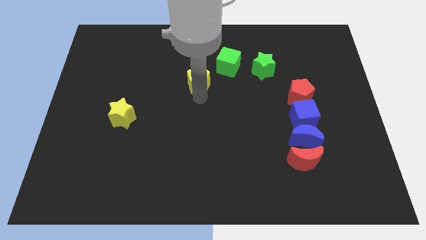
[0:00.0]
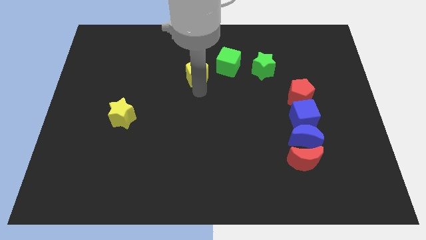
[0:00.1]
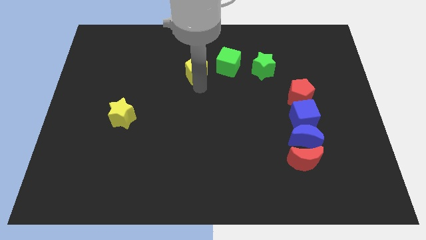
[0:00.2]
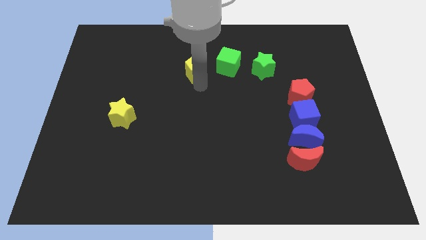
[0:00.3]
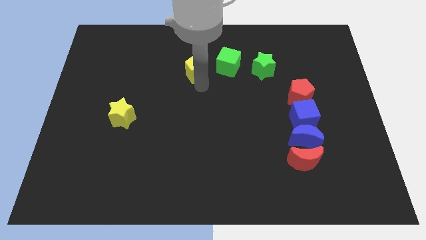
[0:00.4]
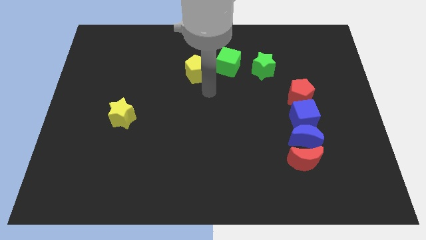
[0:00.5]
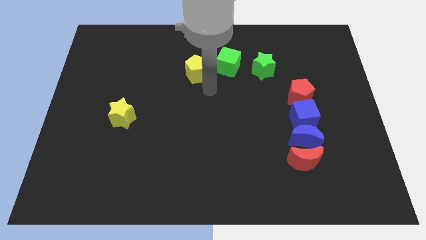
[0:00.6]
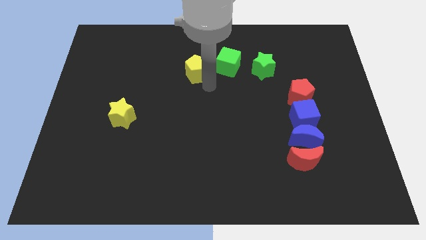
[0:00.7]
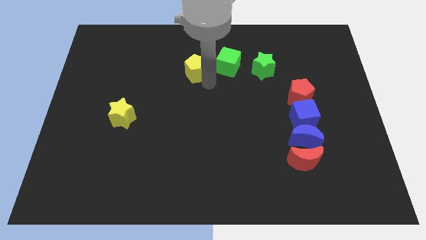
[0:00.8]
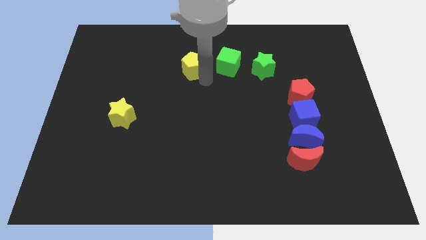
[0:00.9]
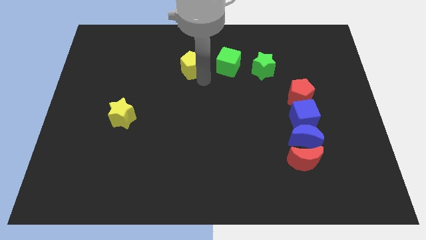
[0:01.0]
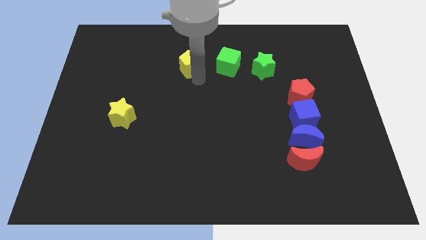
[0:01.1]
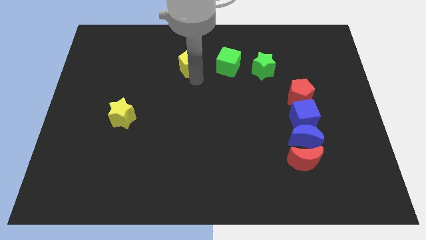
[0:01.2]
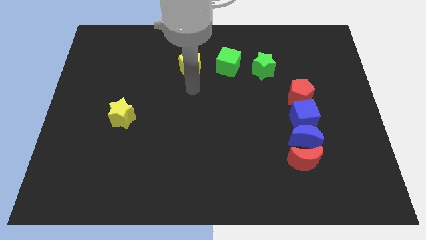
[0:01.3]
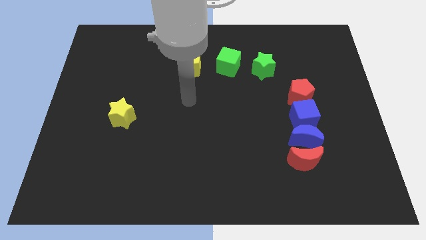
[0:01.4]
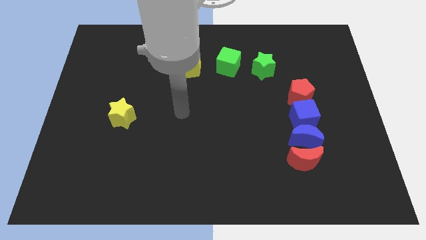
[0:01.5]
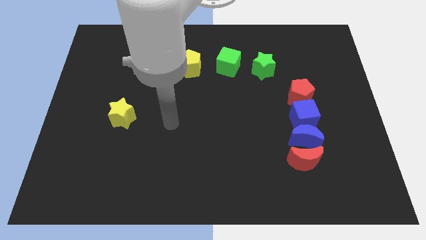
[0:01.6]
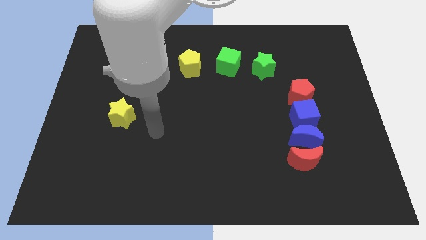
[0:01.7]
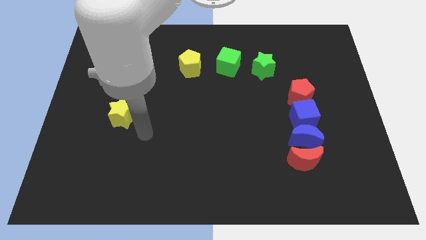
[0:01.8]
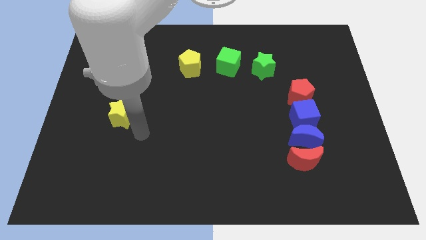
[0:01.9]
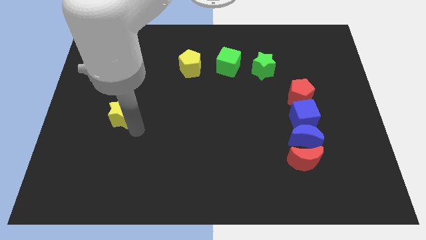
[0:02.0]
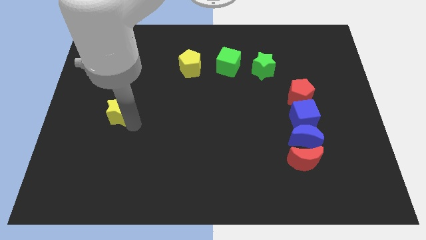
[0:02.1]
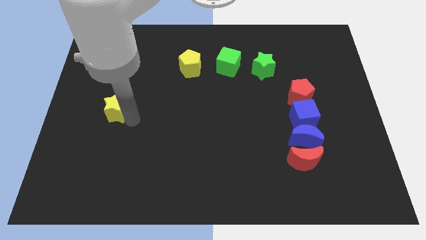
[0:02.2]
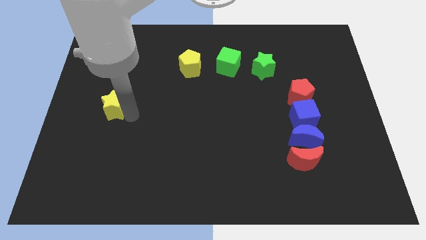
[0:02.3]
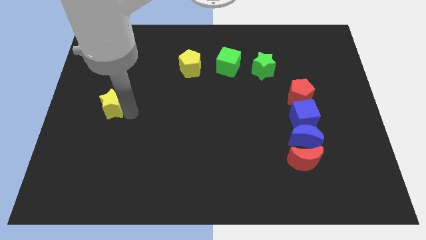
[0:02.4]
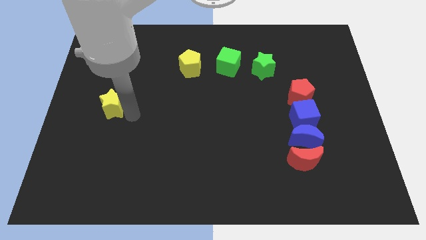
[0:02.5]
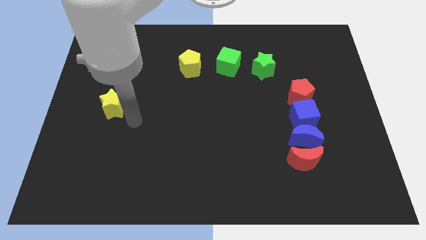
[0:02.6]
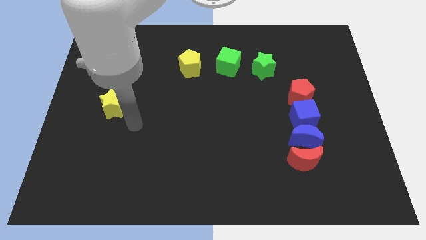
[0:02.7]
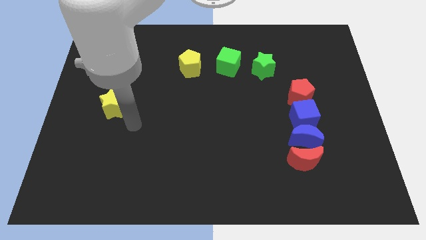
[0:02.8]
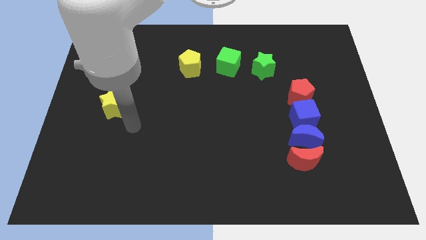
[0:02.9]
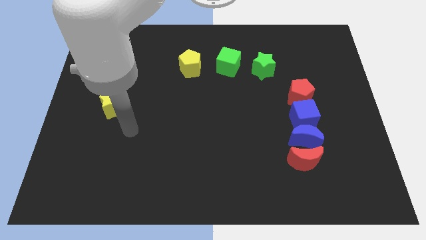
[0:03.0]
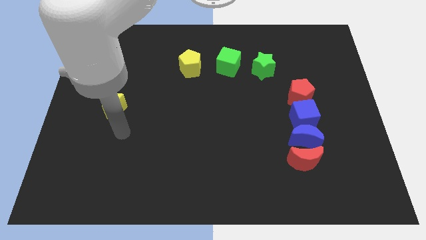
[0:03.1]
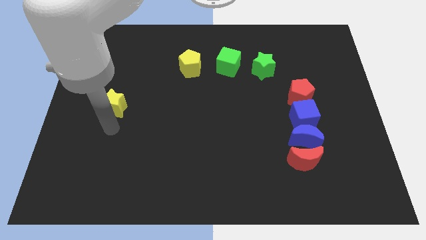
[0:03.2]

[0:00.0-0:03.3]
move the yellow star slightly up

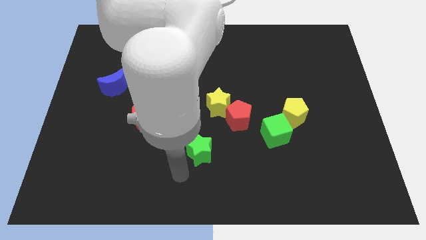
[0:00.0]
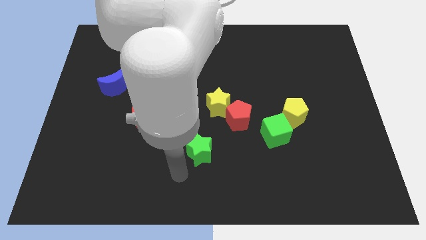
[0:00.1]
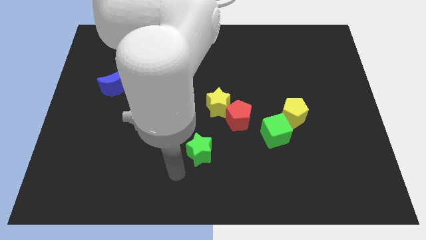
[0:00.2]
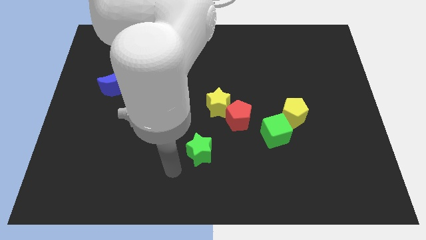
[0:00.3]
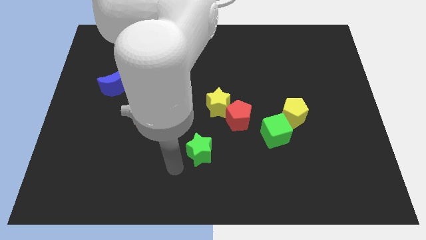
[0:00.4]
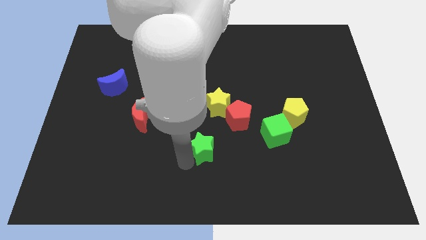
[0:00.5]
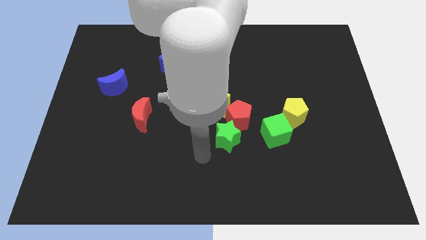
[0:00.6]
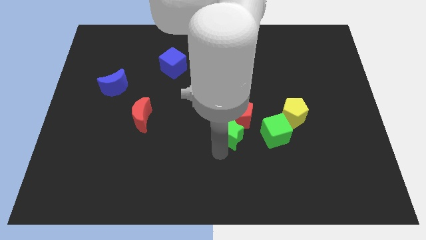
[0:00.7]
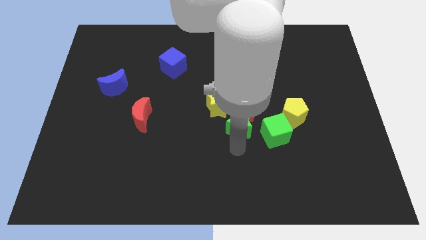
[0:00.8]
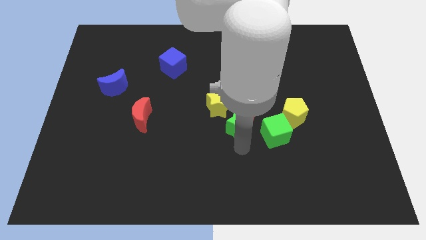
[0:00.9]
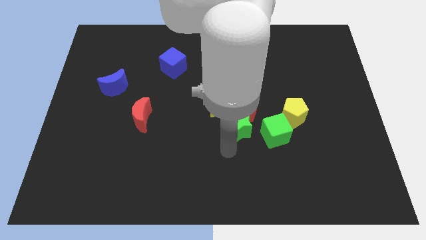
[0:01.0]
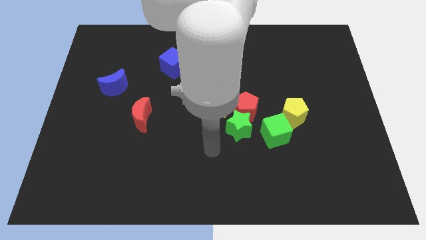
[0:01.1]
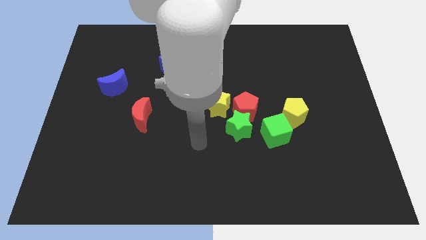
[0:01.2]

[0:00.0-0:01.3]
push the green star into the red pentagon

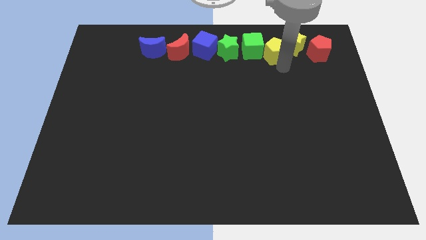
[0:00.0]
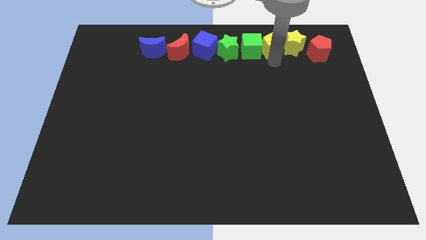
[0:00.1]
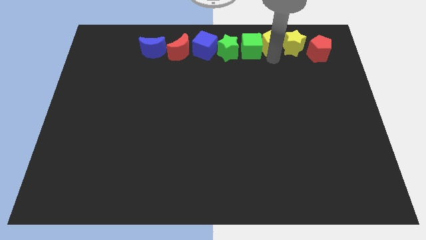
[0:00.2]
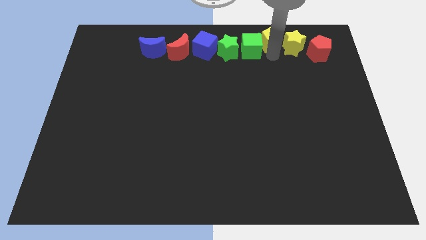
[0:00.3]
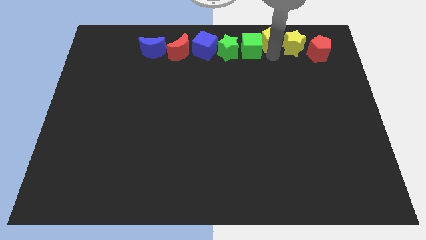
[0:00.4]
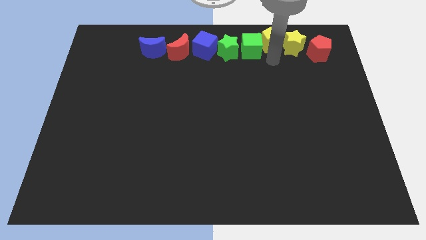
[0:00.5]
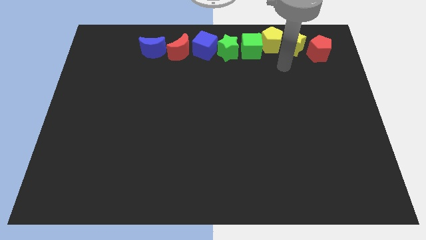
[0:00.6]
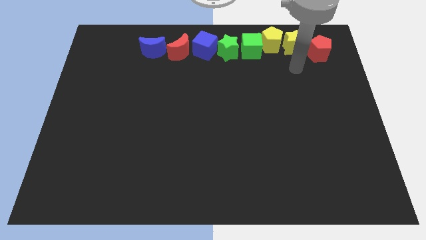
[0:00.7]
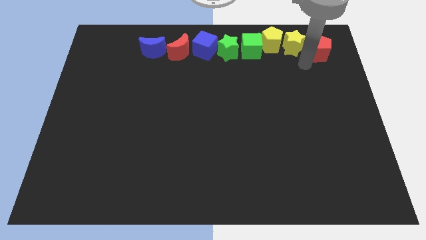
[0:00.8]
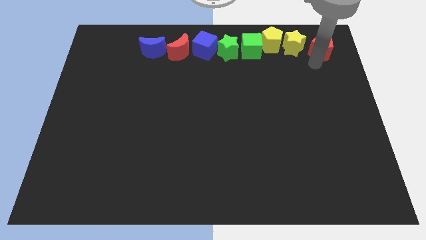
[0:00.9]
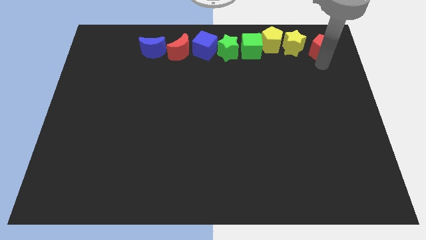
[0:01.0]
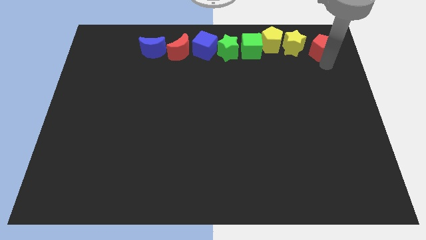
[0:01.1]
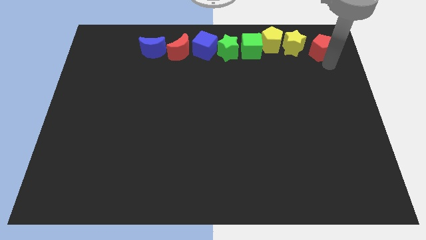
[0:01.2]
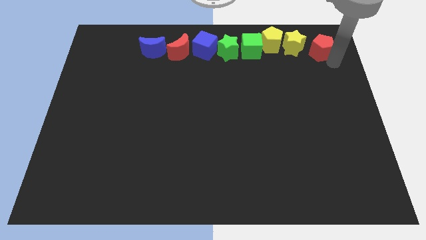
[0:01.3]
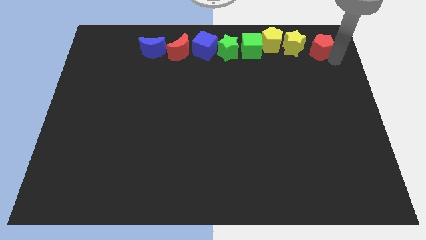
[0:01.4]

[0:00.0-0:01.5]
push the yellow pentagon towards the top of the board

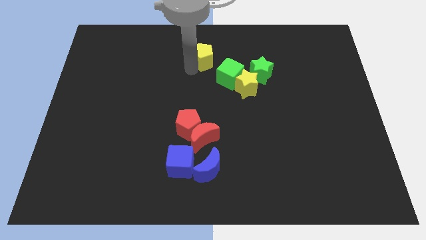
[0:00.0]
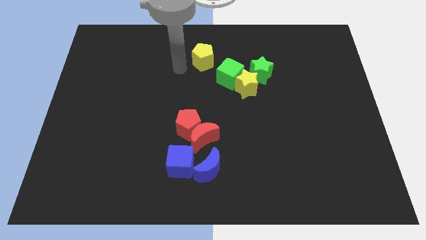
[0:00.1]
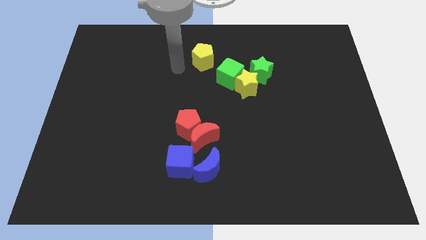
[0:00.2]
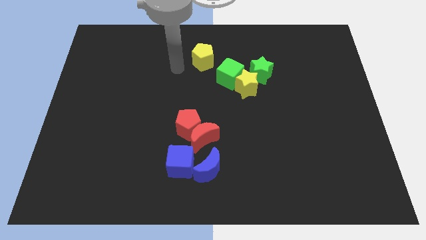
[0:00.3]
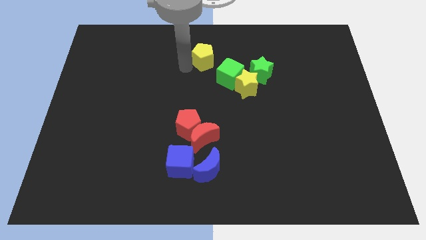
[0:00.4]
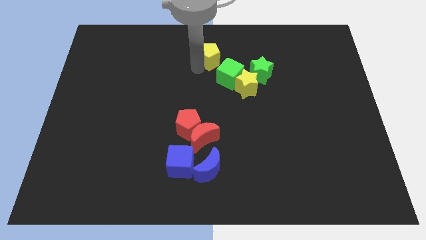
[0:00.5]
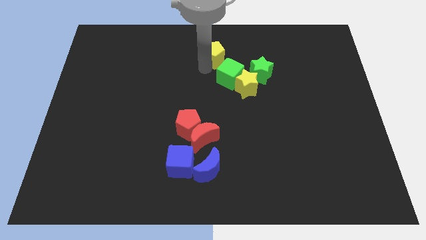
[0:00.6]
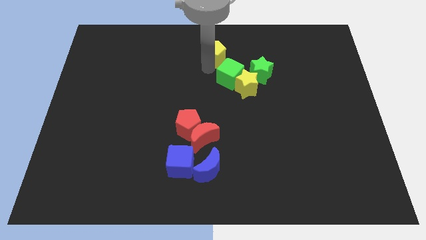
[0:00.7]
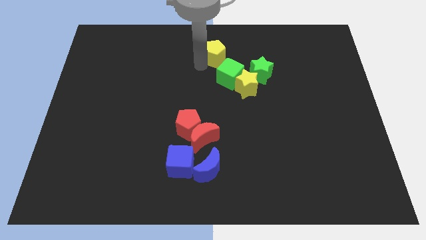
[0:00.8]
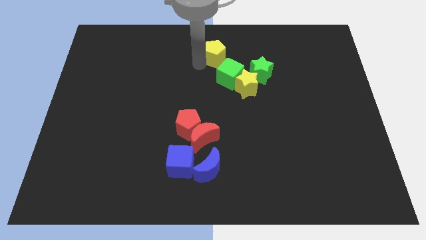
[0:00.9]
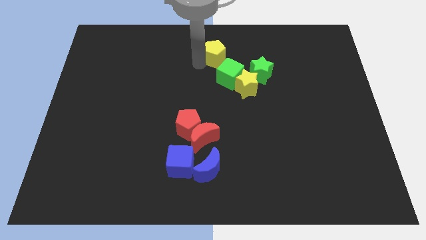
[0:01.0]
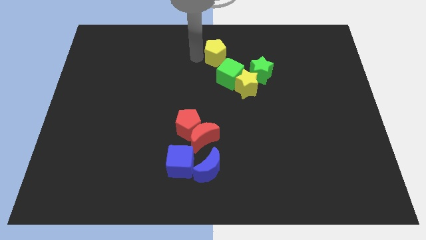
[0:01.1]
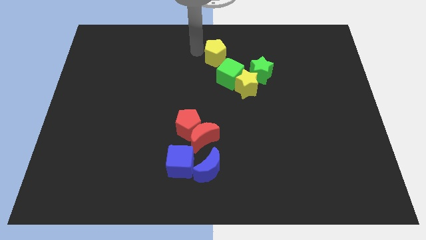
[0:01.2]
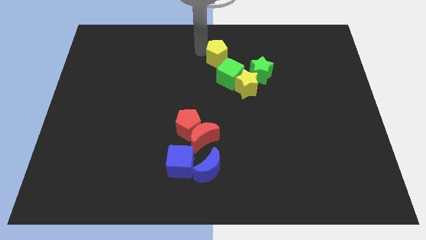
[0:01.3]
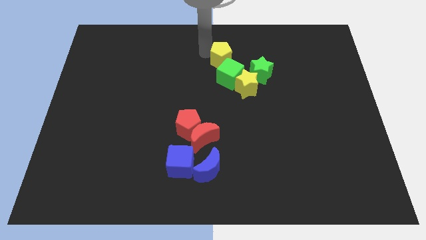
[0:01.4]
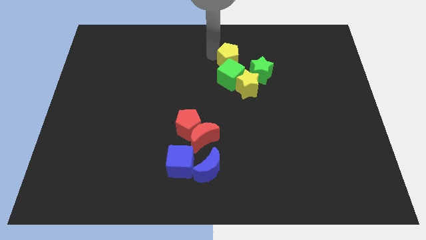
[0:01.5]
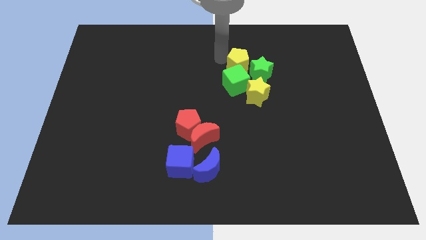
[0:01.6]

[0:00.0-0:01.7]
put the yellow pentagon vertically above the green cube

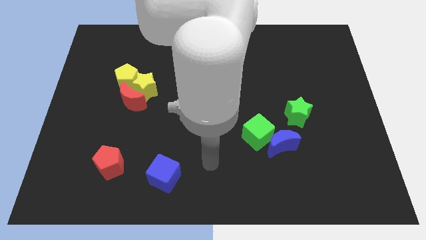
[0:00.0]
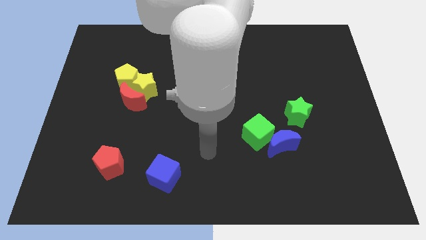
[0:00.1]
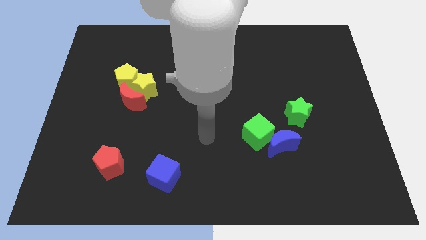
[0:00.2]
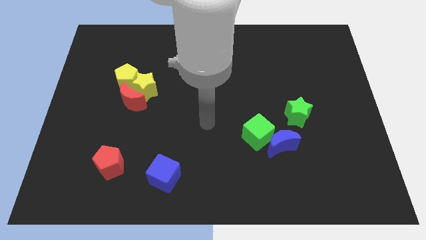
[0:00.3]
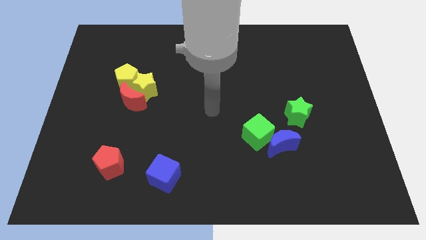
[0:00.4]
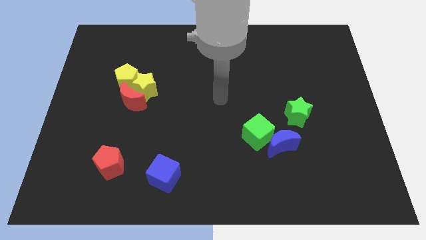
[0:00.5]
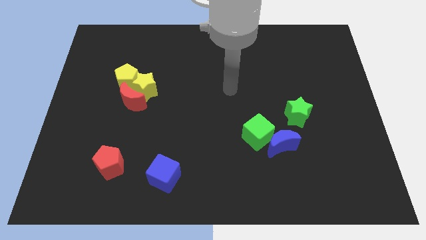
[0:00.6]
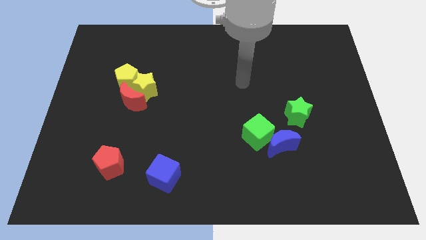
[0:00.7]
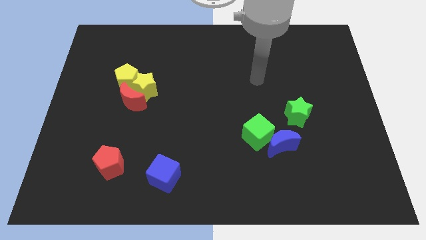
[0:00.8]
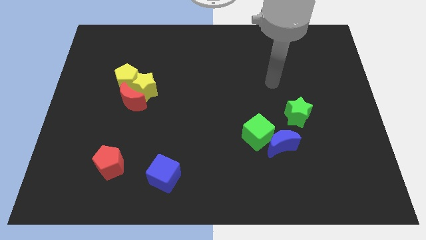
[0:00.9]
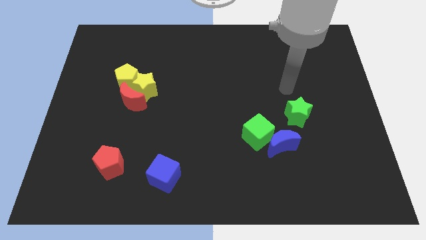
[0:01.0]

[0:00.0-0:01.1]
slide your arm on top of green star
